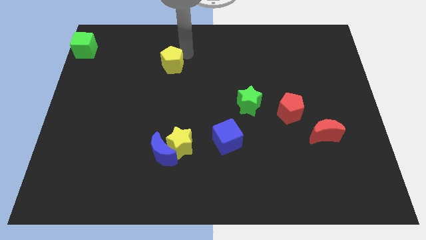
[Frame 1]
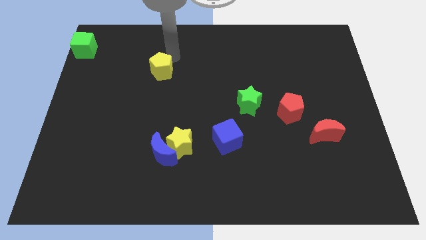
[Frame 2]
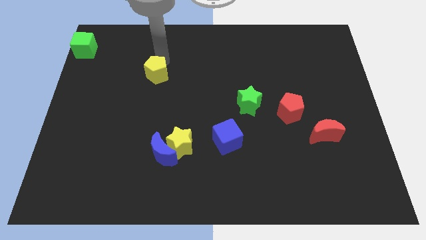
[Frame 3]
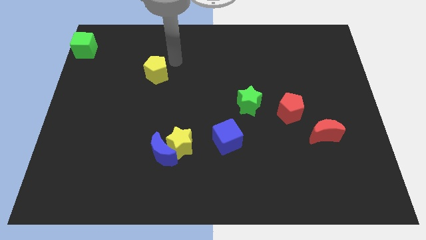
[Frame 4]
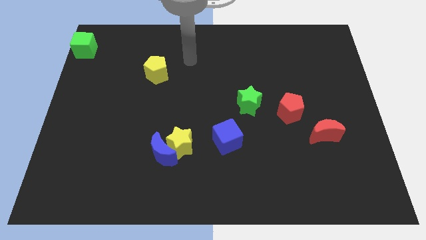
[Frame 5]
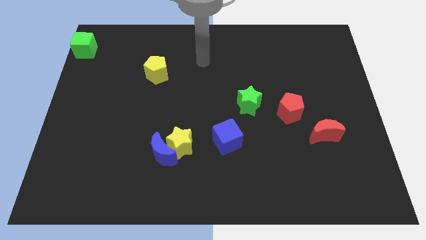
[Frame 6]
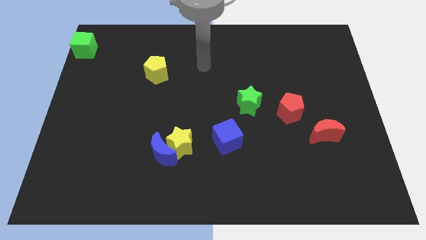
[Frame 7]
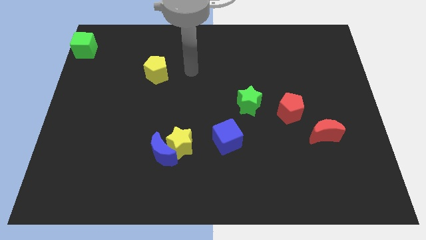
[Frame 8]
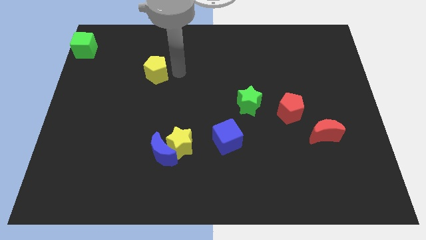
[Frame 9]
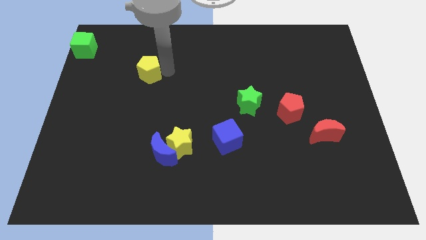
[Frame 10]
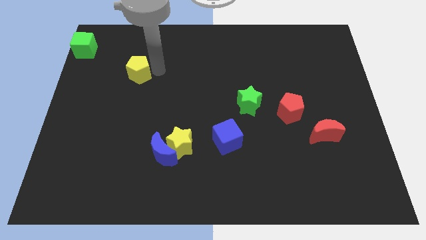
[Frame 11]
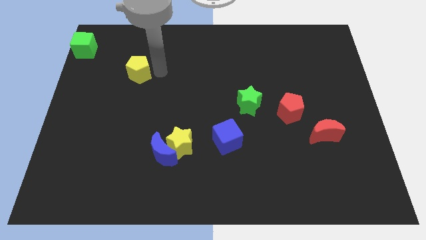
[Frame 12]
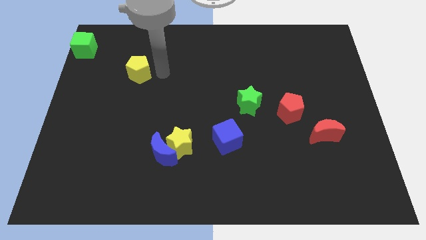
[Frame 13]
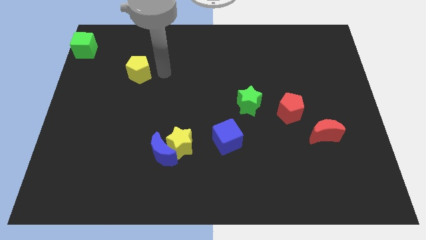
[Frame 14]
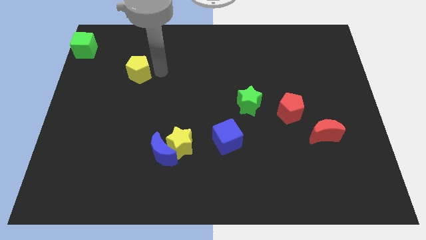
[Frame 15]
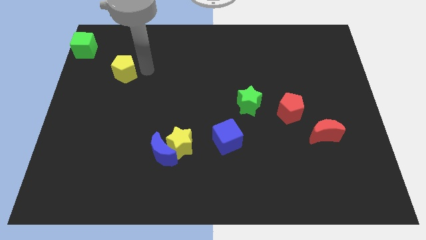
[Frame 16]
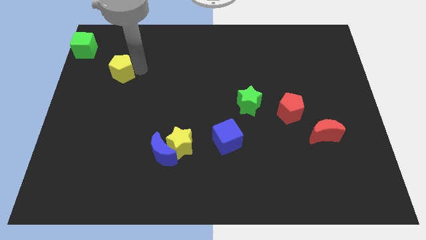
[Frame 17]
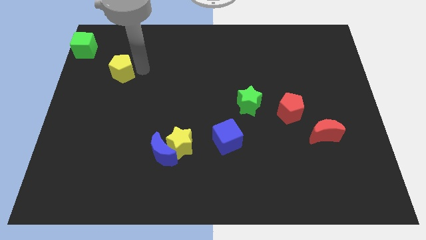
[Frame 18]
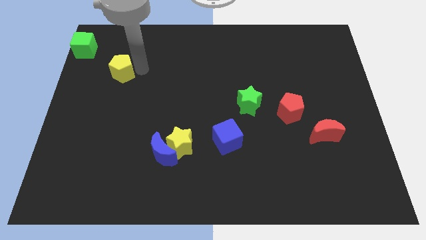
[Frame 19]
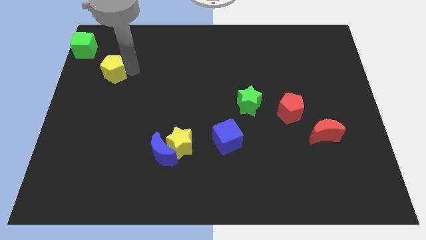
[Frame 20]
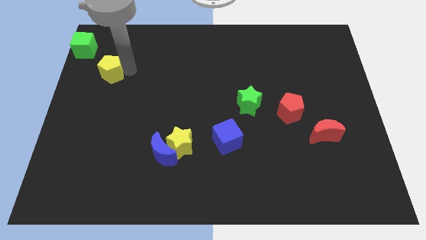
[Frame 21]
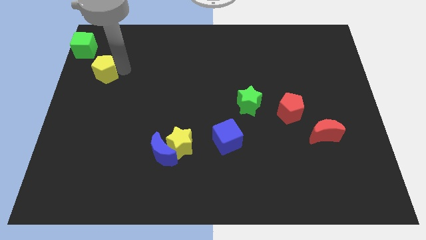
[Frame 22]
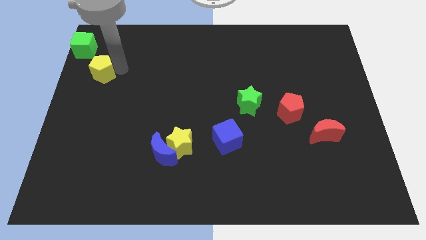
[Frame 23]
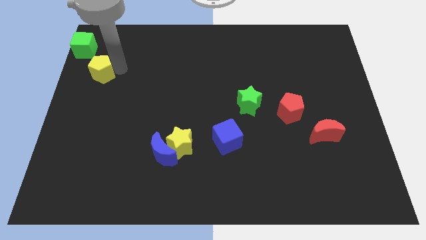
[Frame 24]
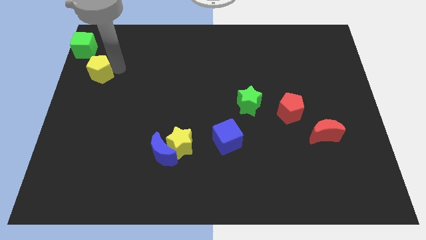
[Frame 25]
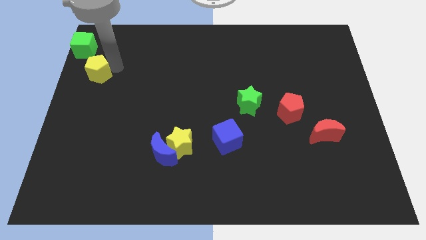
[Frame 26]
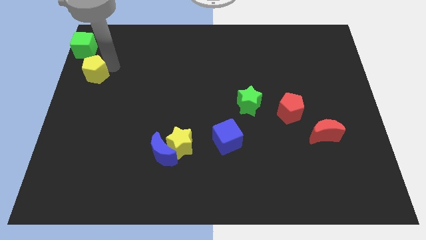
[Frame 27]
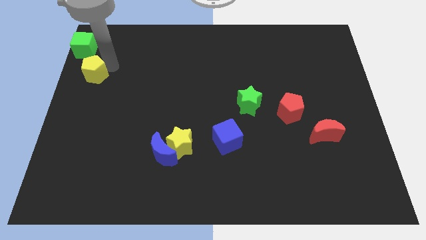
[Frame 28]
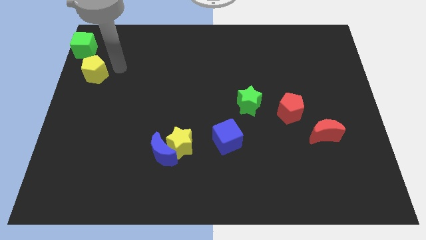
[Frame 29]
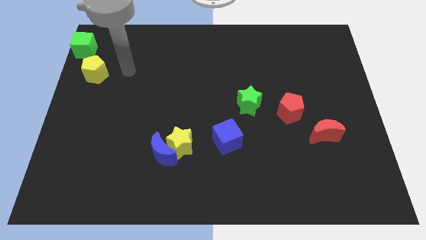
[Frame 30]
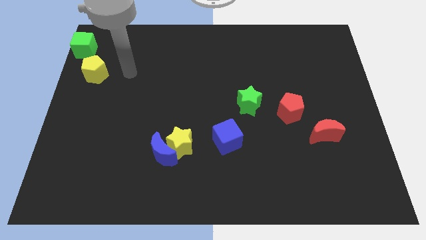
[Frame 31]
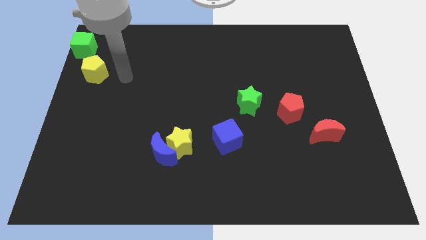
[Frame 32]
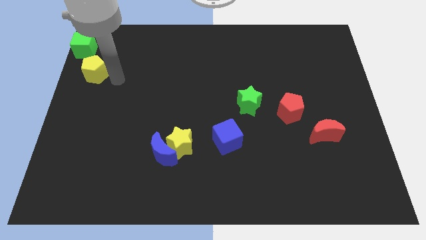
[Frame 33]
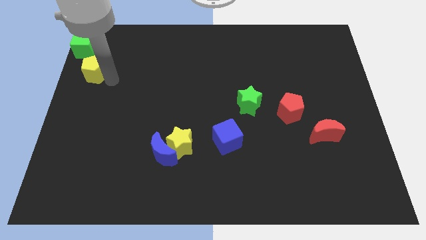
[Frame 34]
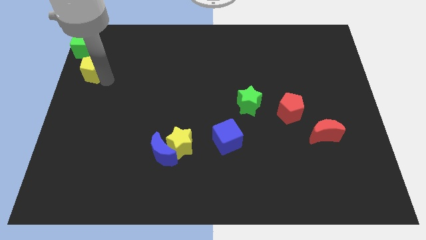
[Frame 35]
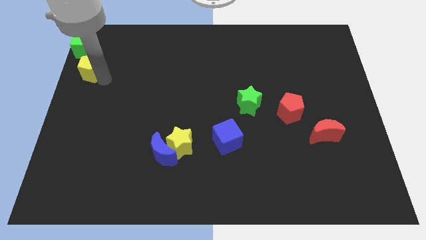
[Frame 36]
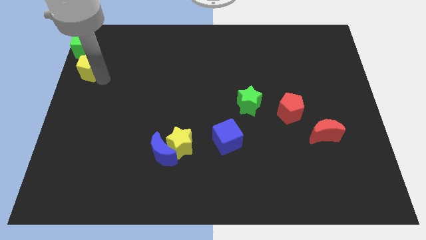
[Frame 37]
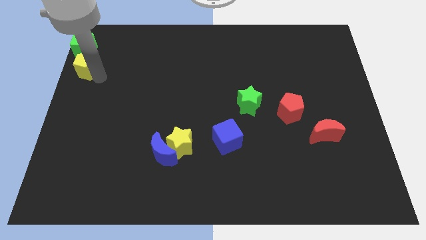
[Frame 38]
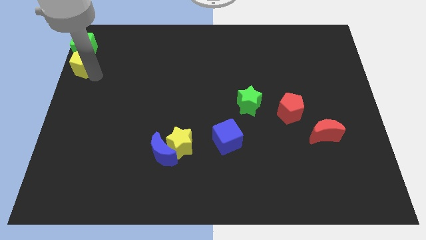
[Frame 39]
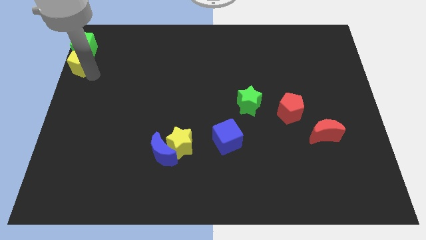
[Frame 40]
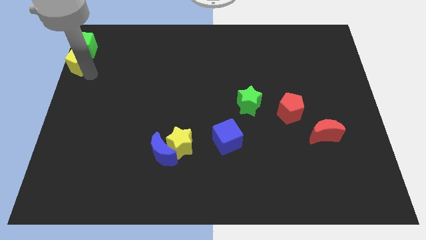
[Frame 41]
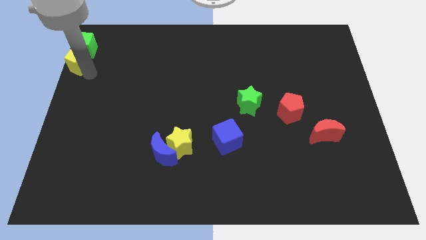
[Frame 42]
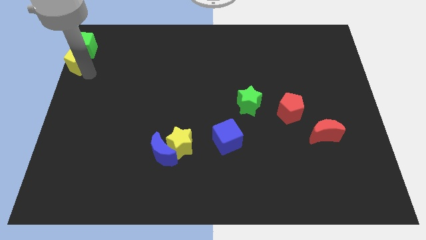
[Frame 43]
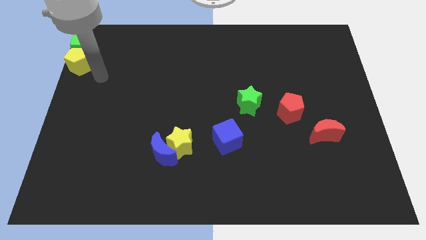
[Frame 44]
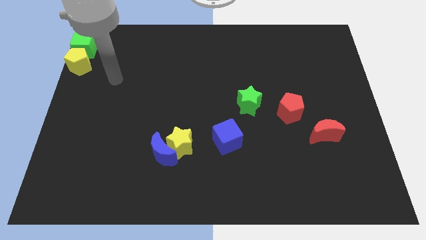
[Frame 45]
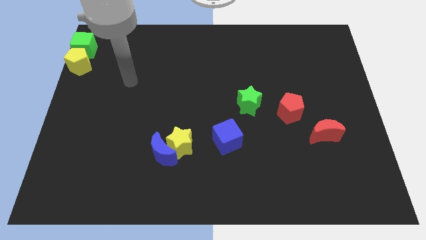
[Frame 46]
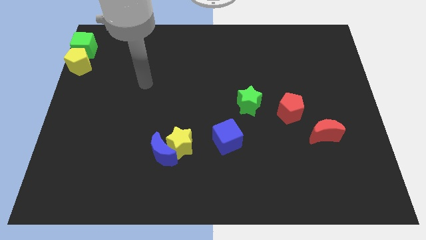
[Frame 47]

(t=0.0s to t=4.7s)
place the yellow pentagon below the green cube

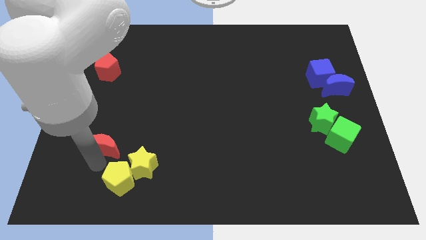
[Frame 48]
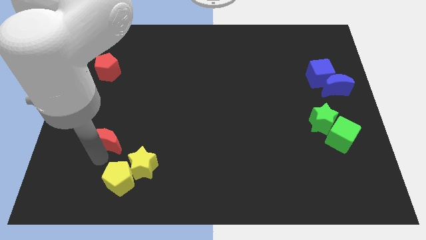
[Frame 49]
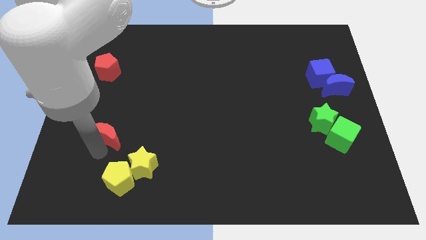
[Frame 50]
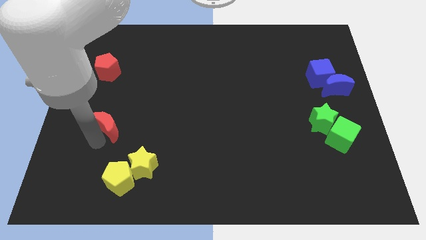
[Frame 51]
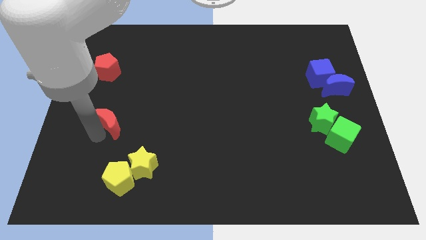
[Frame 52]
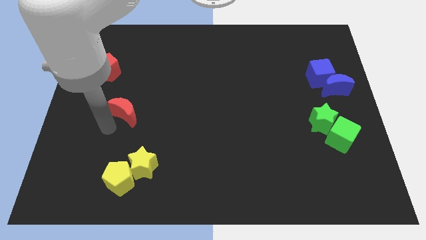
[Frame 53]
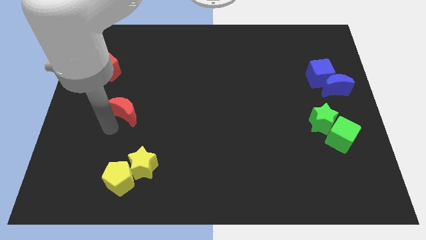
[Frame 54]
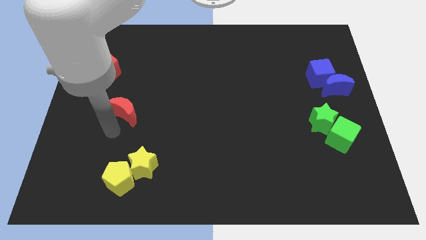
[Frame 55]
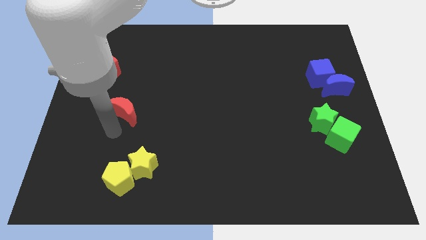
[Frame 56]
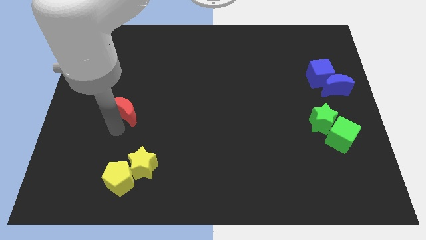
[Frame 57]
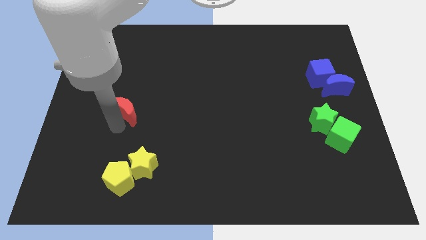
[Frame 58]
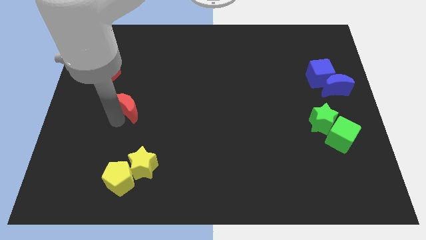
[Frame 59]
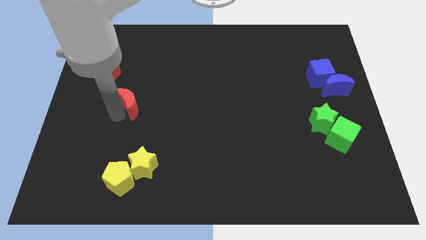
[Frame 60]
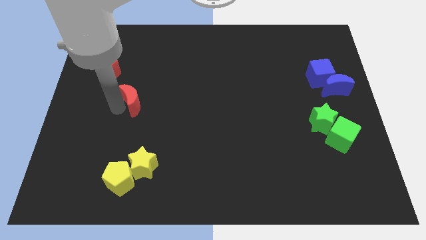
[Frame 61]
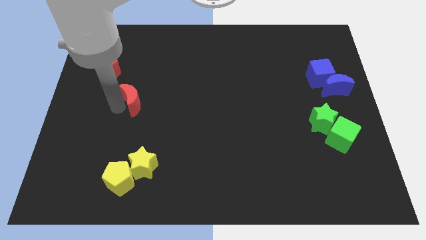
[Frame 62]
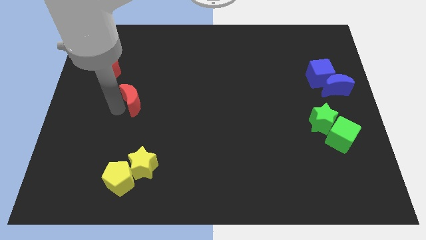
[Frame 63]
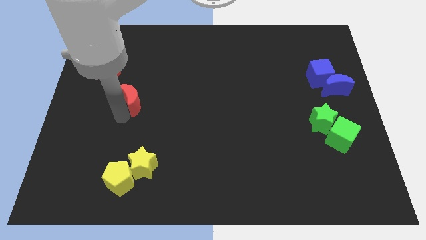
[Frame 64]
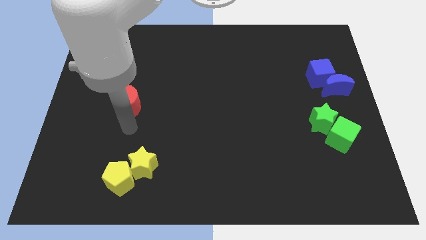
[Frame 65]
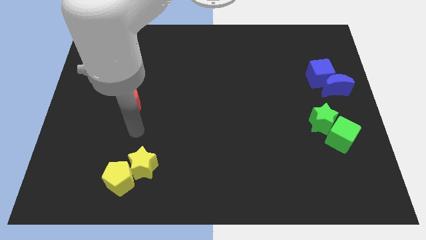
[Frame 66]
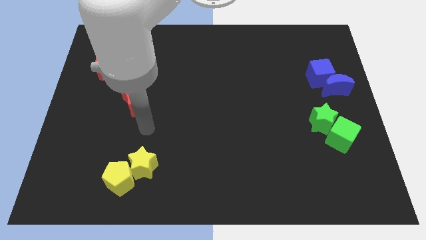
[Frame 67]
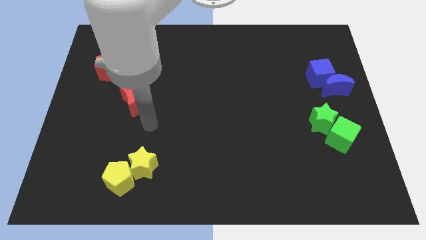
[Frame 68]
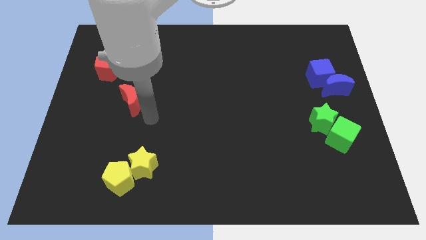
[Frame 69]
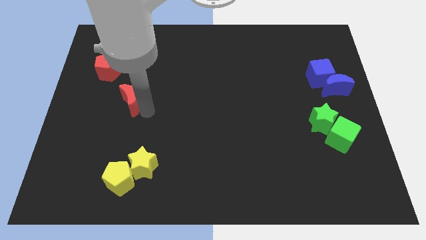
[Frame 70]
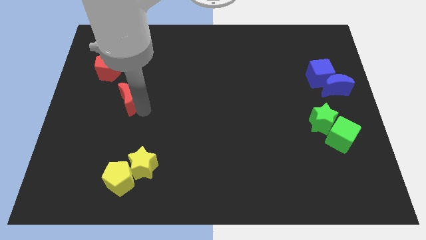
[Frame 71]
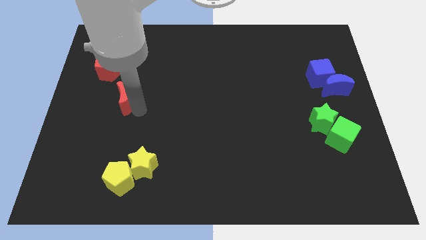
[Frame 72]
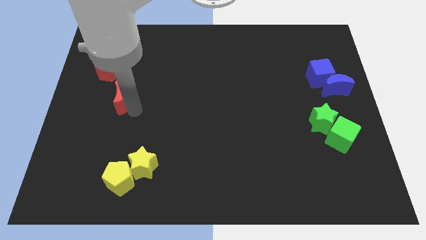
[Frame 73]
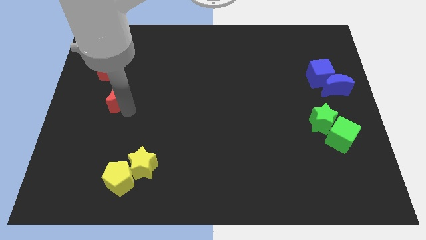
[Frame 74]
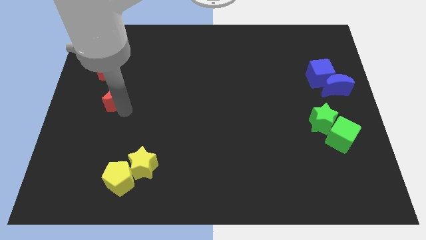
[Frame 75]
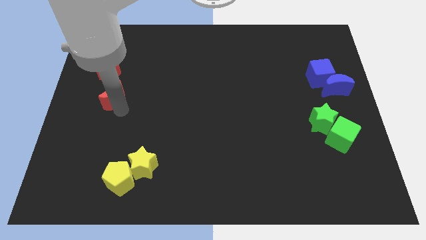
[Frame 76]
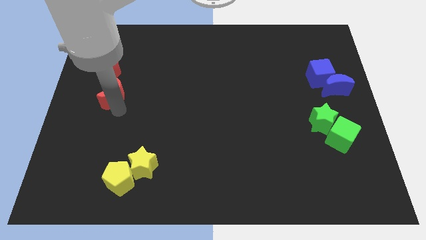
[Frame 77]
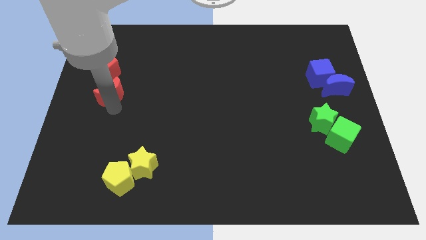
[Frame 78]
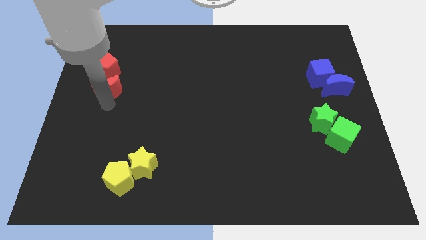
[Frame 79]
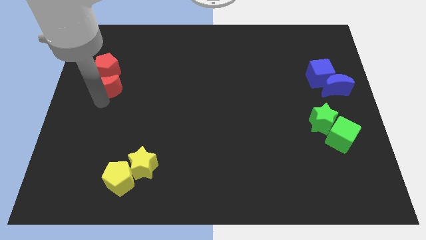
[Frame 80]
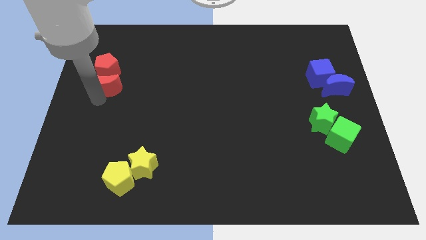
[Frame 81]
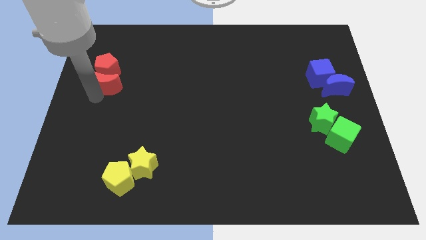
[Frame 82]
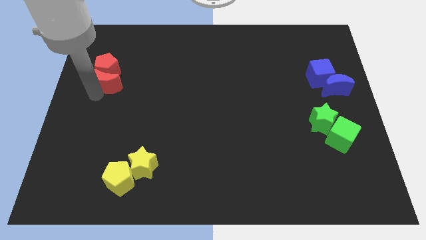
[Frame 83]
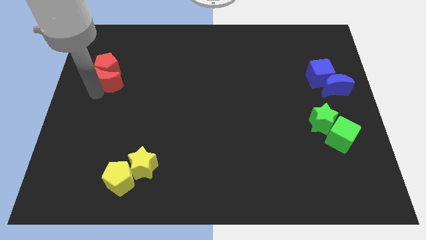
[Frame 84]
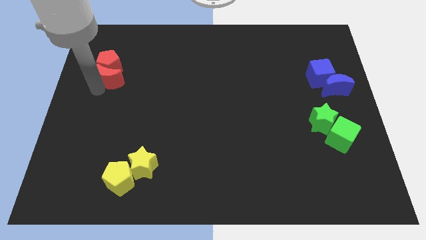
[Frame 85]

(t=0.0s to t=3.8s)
move the red crescent into the red pentagon

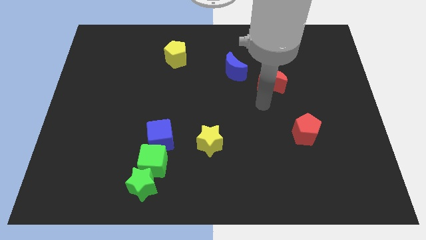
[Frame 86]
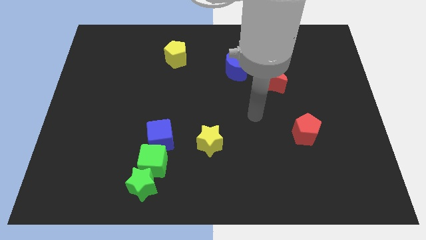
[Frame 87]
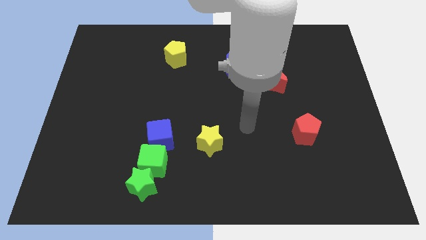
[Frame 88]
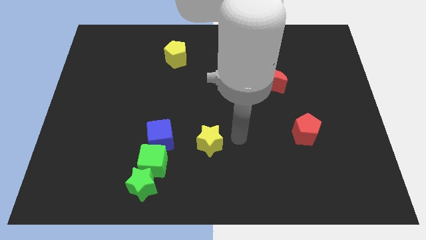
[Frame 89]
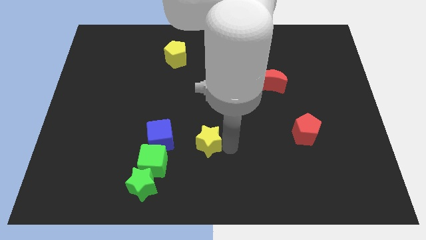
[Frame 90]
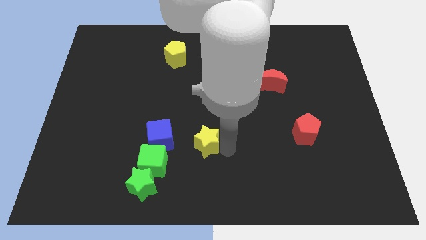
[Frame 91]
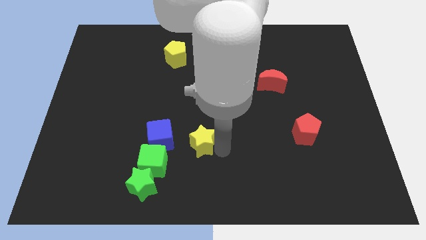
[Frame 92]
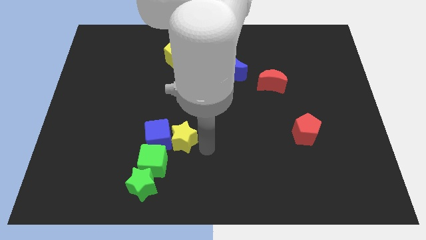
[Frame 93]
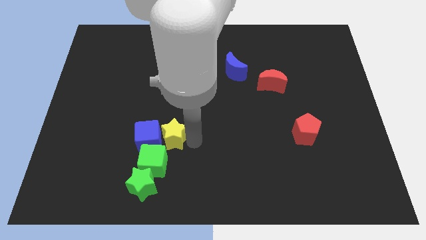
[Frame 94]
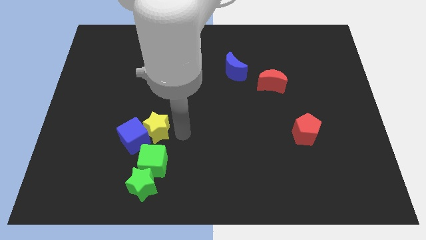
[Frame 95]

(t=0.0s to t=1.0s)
move the yellow star to the right of the blue cube
